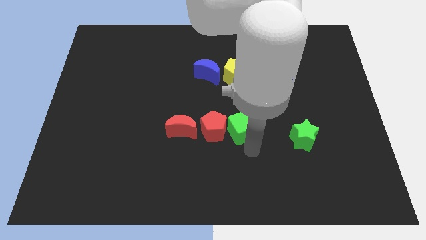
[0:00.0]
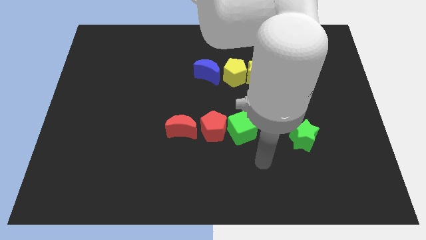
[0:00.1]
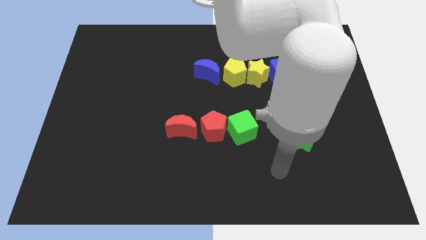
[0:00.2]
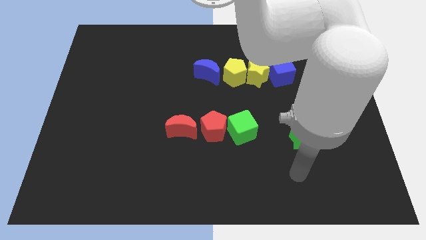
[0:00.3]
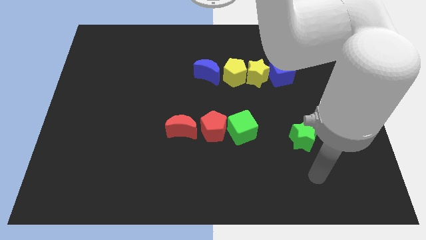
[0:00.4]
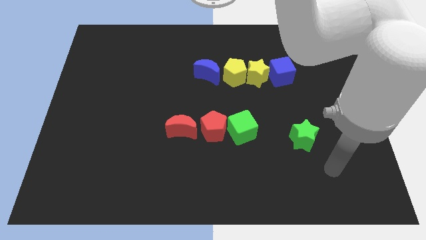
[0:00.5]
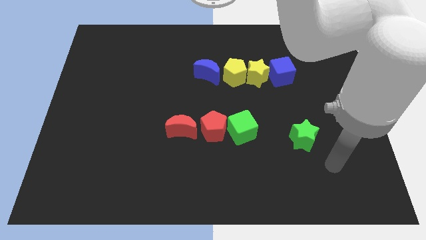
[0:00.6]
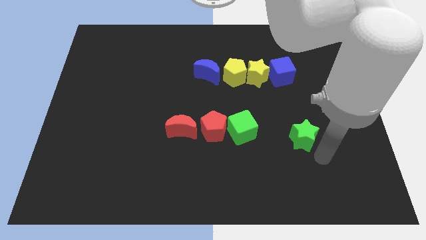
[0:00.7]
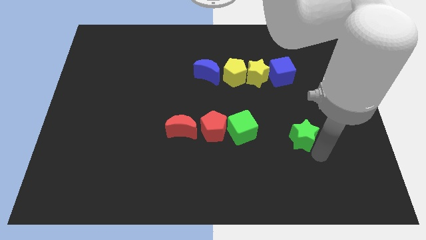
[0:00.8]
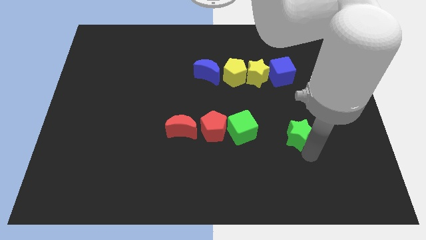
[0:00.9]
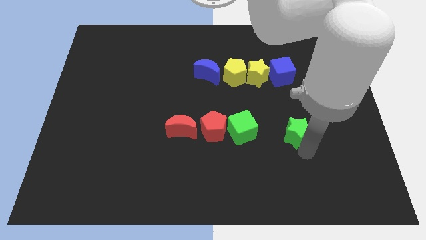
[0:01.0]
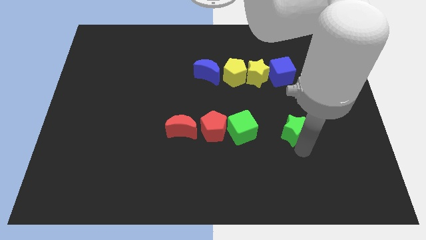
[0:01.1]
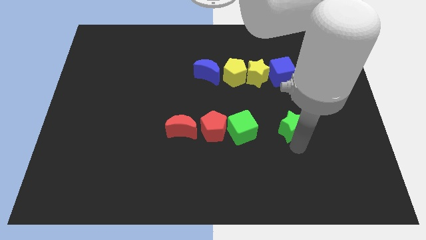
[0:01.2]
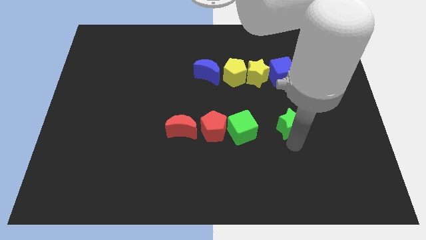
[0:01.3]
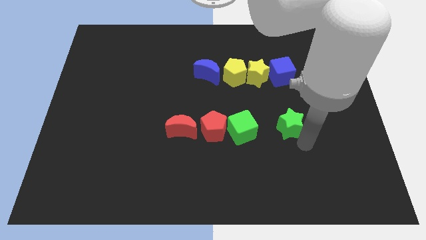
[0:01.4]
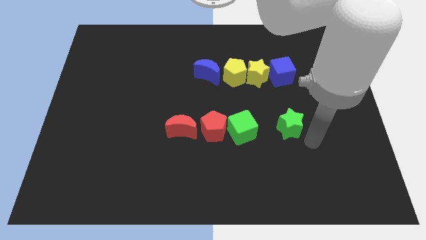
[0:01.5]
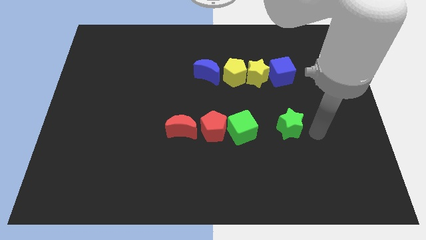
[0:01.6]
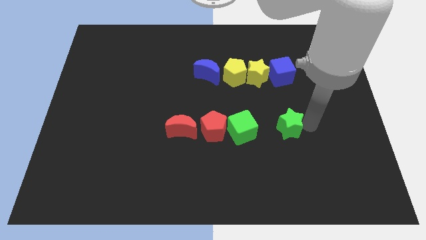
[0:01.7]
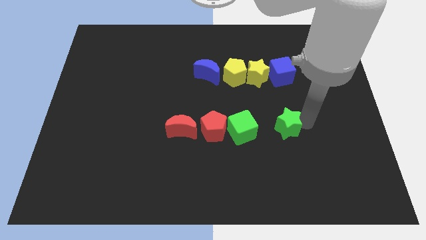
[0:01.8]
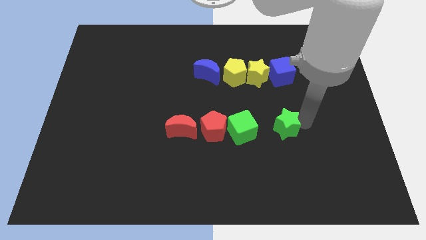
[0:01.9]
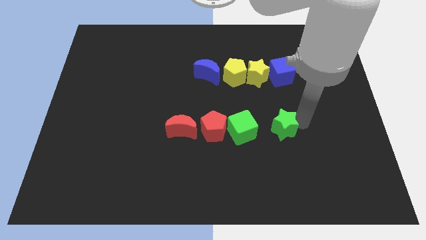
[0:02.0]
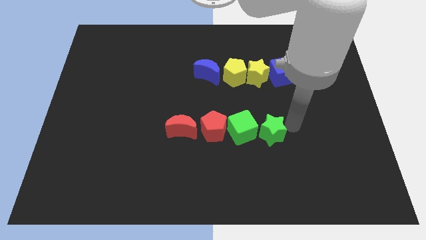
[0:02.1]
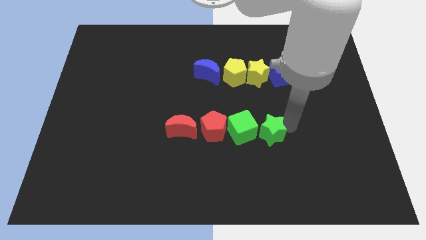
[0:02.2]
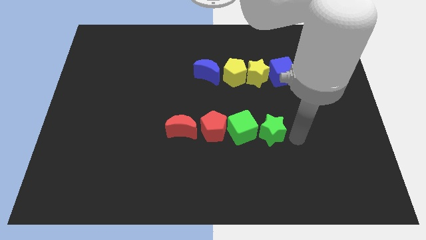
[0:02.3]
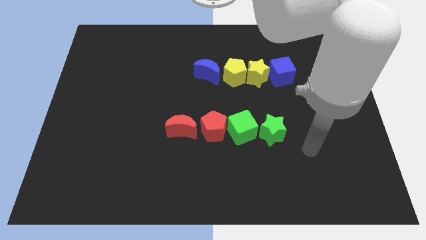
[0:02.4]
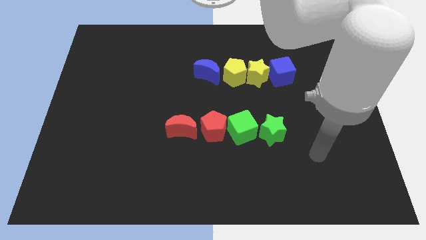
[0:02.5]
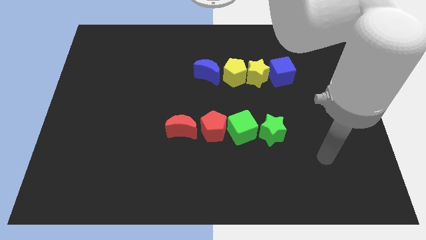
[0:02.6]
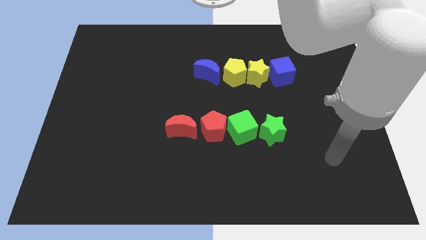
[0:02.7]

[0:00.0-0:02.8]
move the green star to the right of the green cube

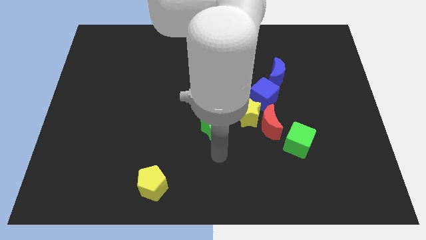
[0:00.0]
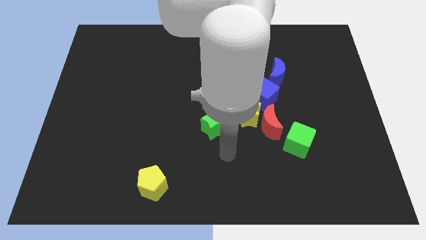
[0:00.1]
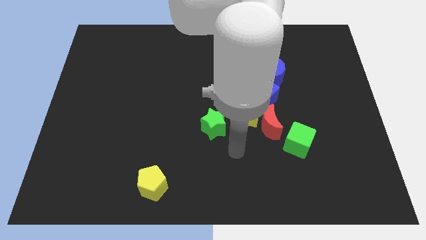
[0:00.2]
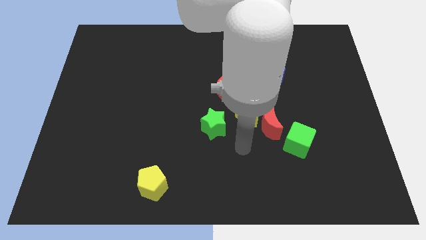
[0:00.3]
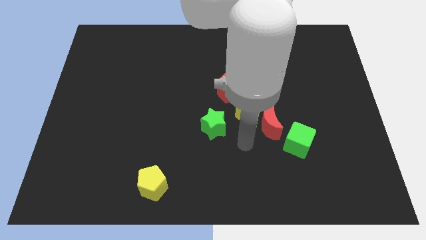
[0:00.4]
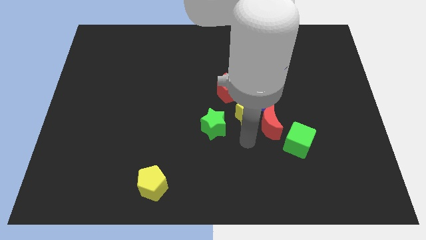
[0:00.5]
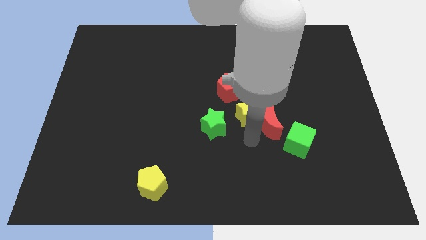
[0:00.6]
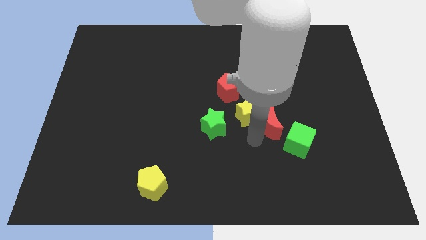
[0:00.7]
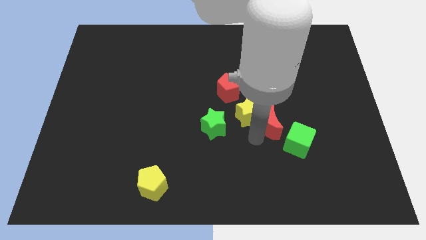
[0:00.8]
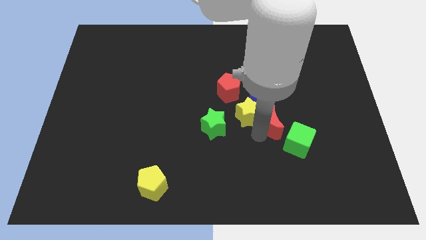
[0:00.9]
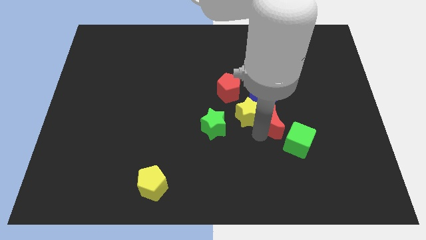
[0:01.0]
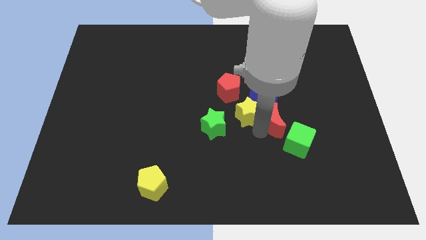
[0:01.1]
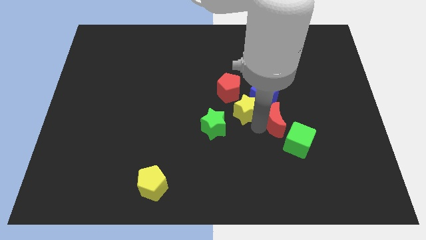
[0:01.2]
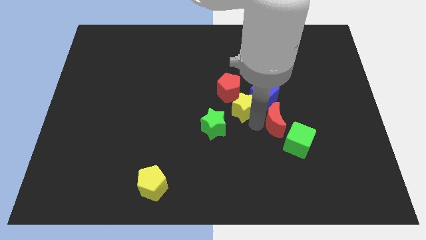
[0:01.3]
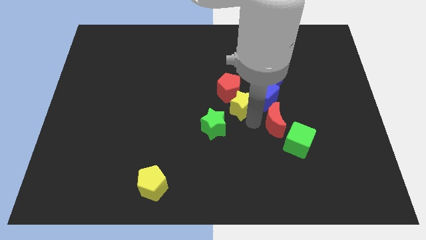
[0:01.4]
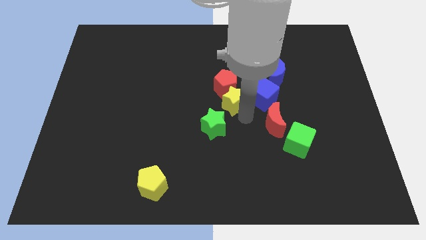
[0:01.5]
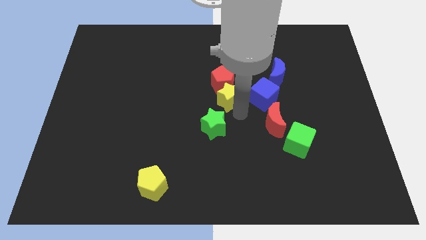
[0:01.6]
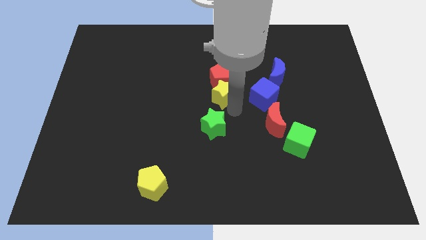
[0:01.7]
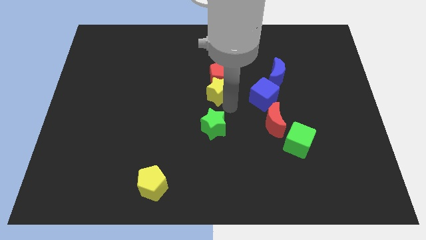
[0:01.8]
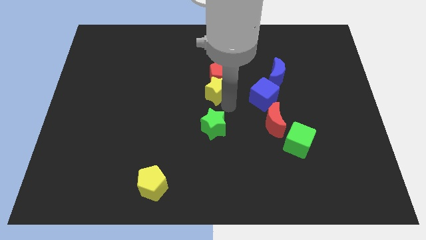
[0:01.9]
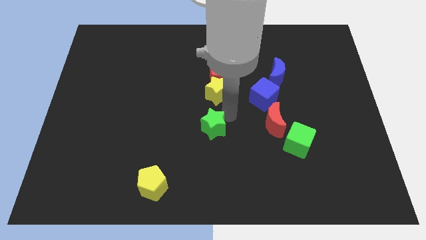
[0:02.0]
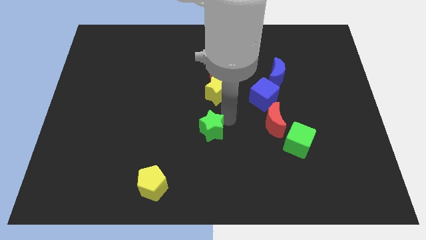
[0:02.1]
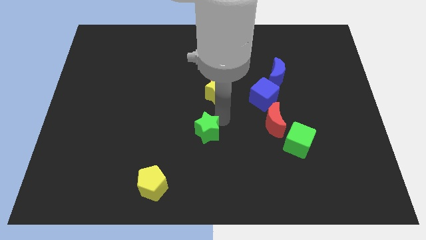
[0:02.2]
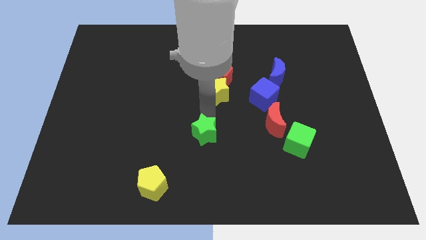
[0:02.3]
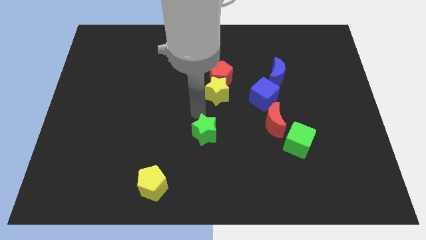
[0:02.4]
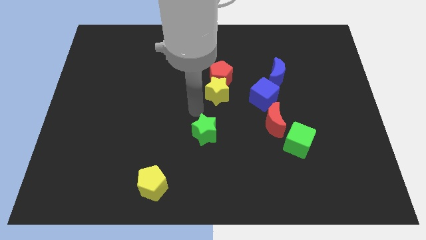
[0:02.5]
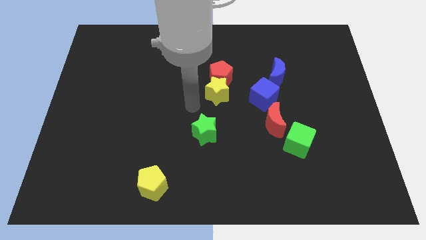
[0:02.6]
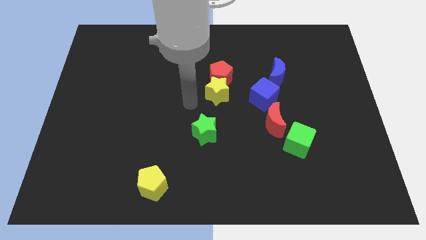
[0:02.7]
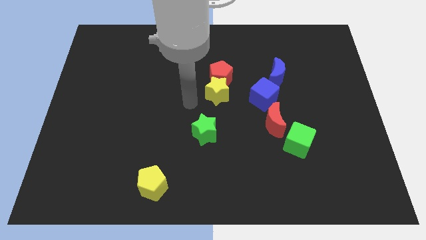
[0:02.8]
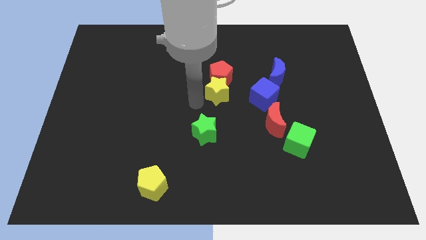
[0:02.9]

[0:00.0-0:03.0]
move yellow star into red pentagon

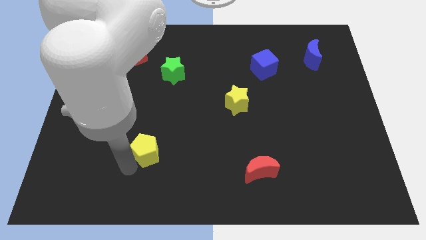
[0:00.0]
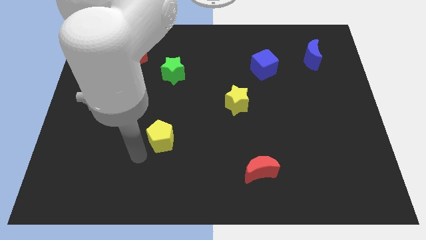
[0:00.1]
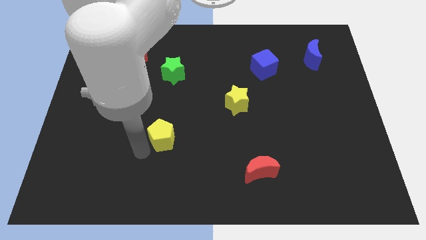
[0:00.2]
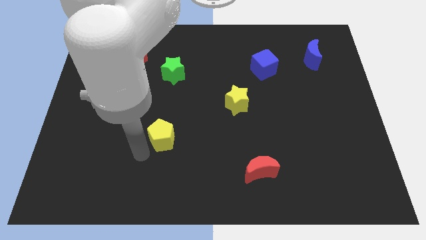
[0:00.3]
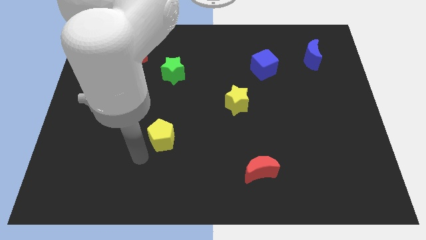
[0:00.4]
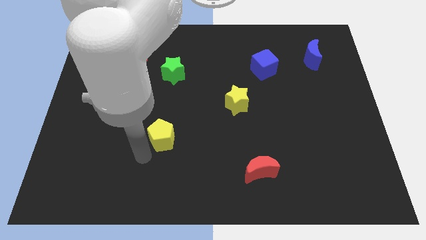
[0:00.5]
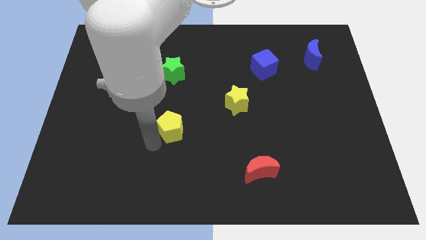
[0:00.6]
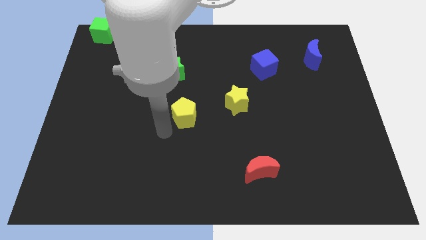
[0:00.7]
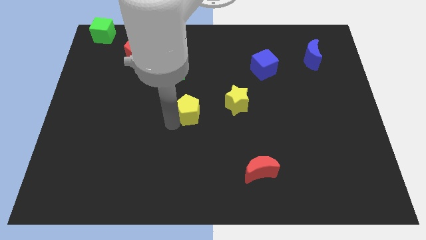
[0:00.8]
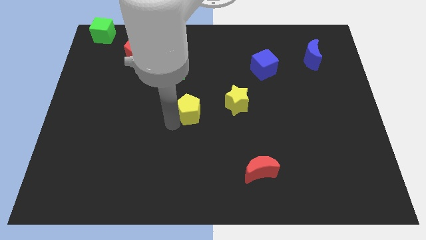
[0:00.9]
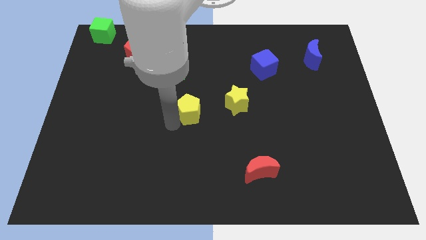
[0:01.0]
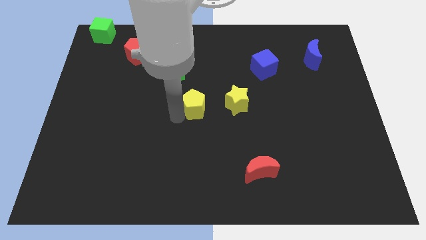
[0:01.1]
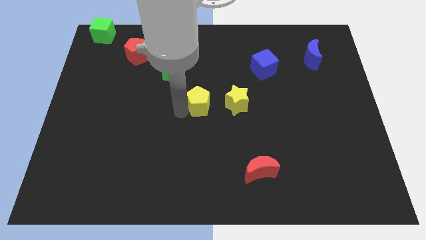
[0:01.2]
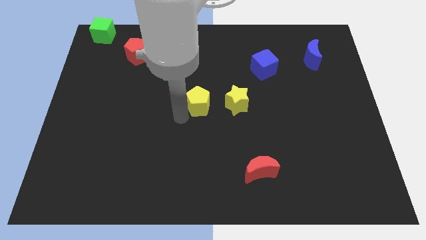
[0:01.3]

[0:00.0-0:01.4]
slide the yellow pentagon to the left of the yellow star

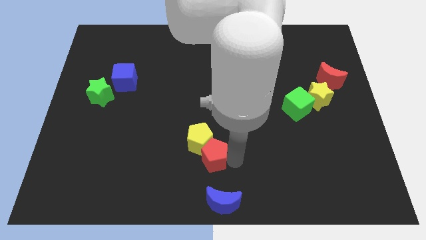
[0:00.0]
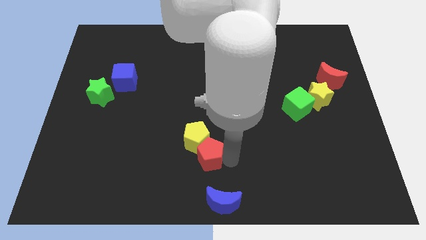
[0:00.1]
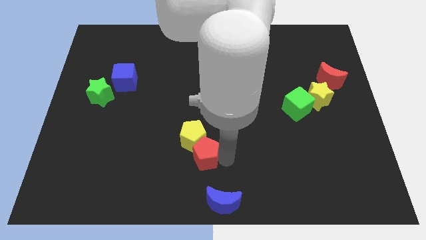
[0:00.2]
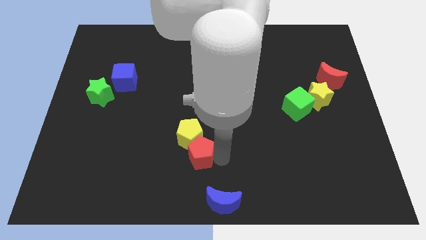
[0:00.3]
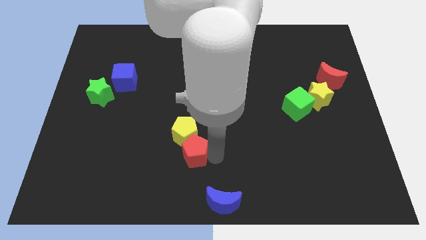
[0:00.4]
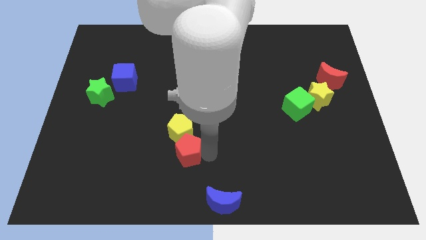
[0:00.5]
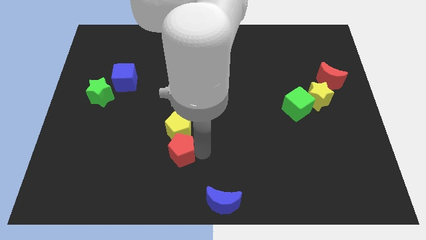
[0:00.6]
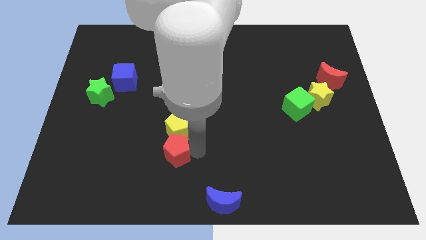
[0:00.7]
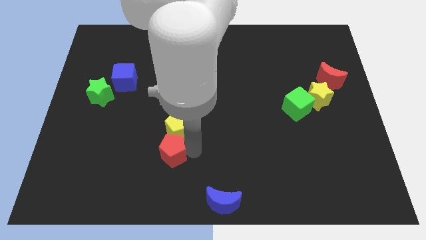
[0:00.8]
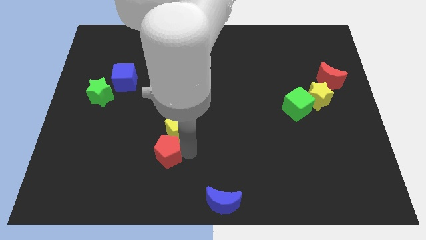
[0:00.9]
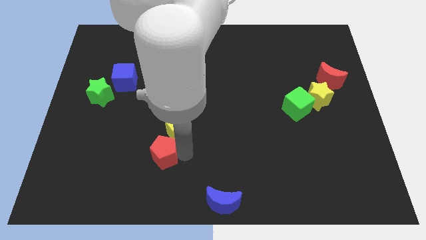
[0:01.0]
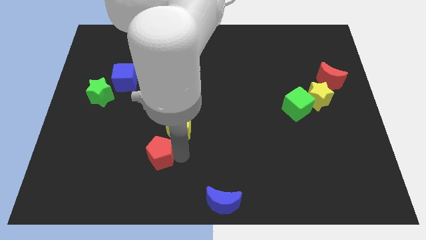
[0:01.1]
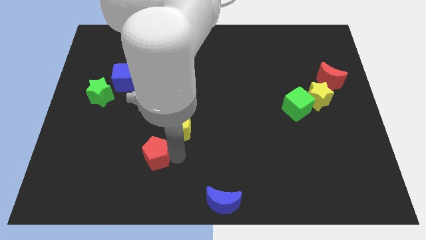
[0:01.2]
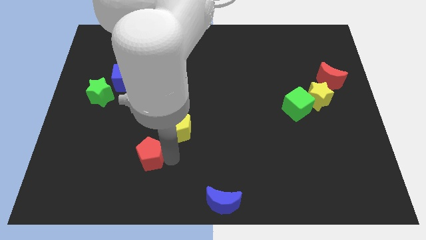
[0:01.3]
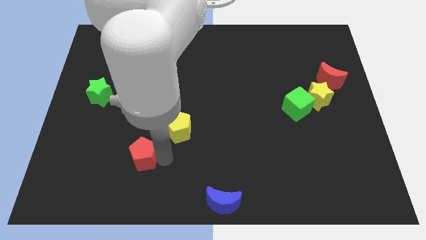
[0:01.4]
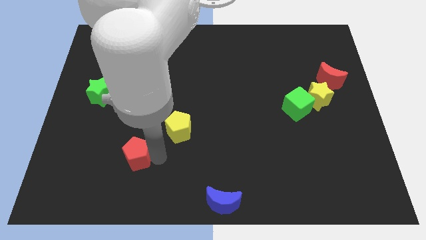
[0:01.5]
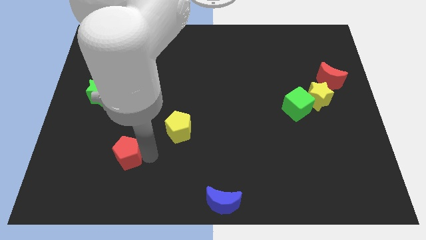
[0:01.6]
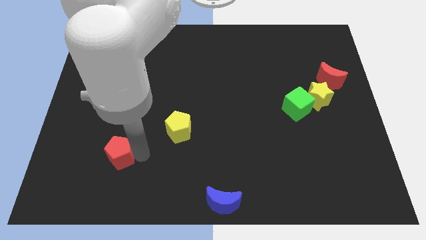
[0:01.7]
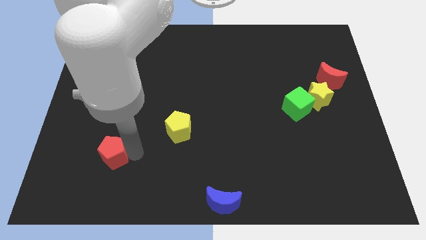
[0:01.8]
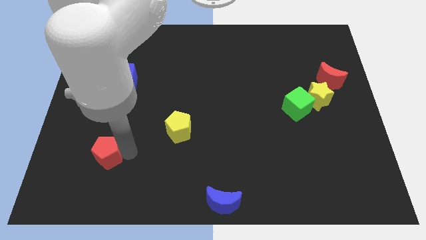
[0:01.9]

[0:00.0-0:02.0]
move the red pentagon away from the yellow pentagon
